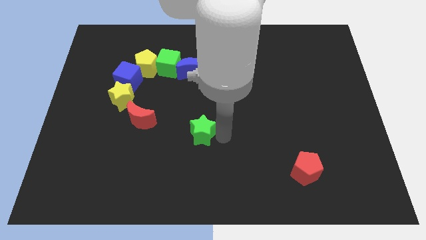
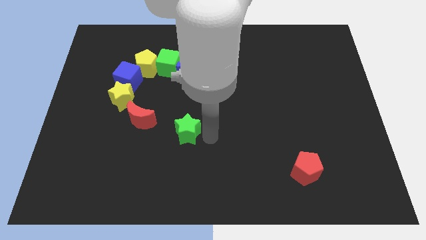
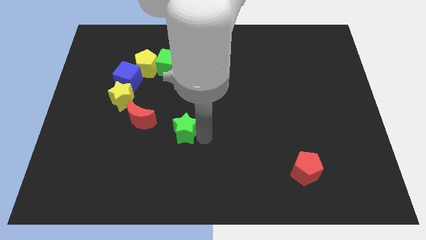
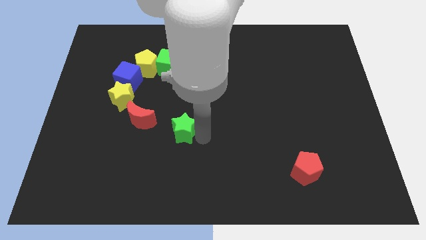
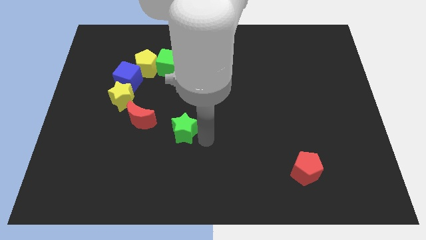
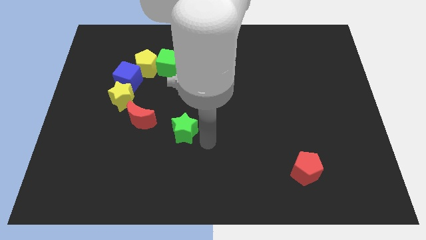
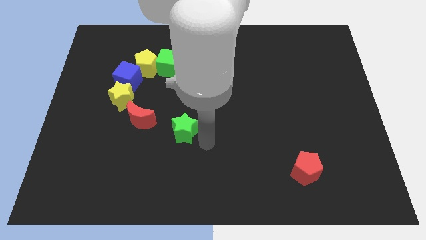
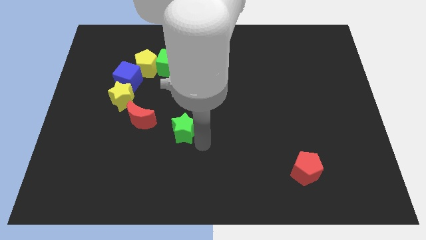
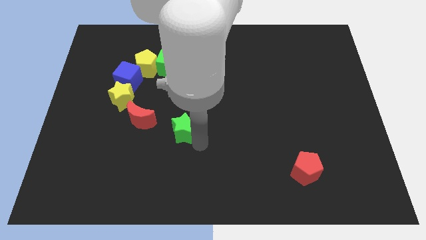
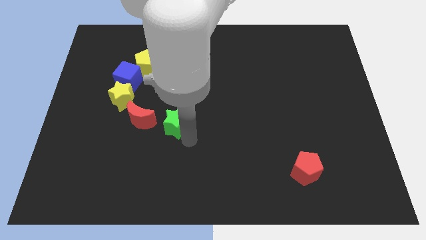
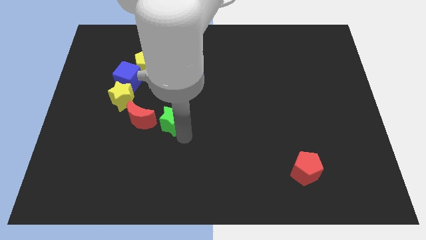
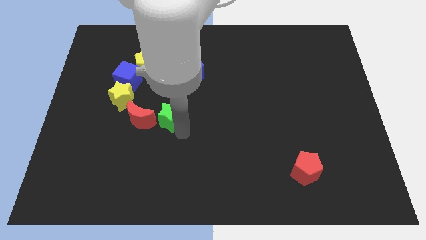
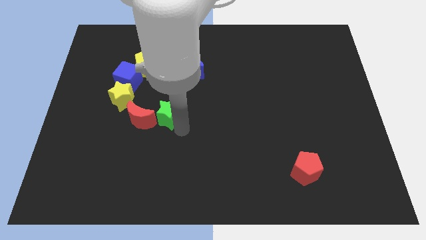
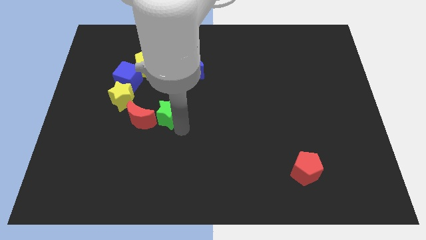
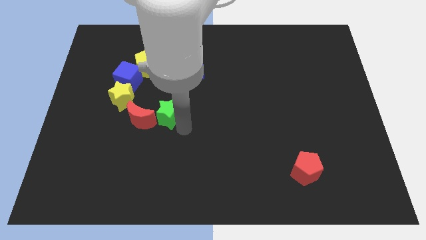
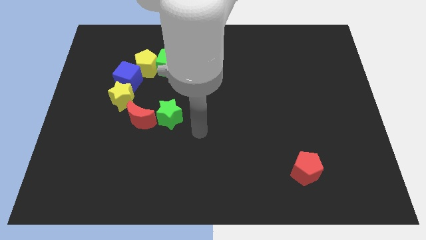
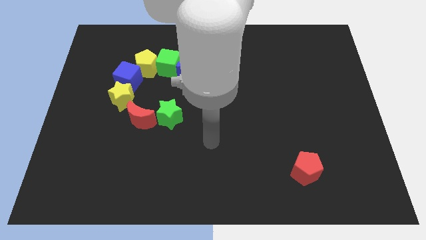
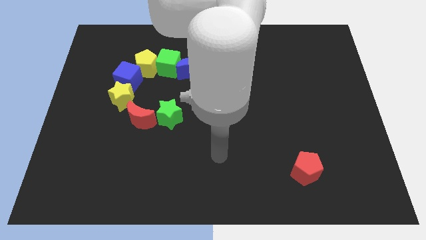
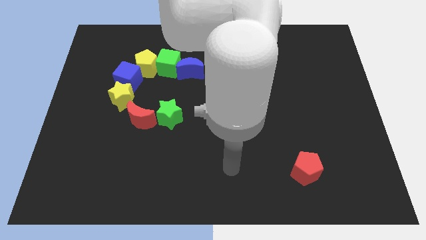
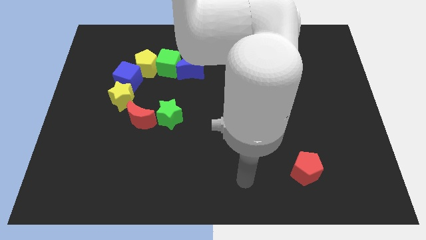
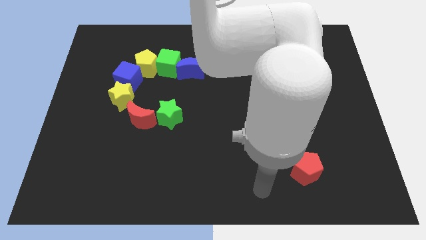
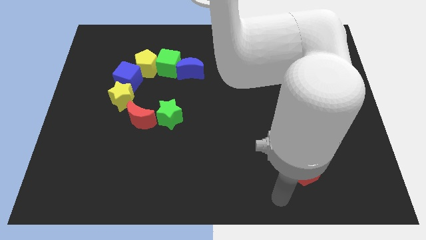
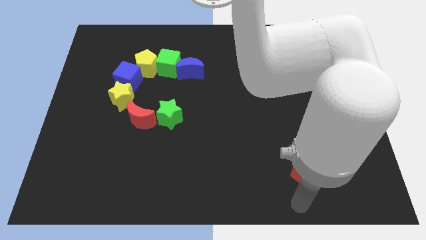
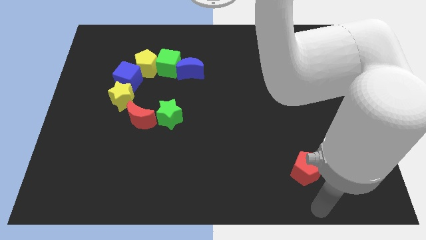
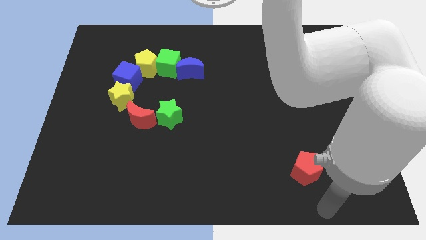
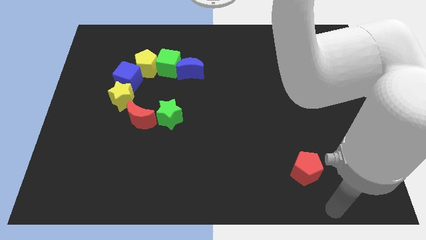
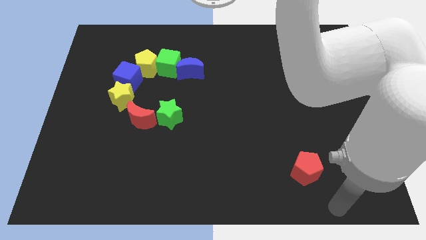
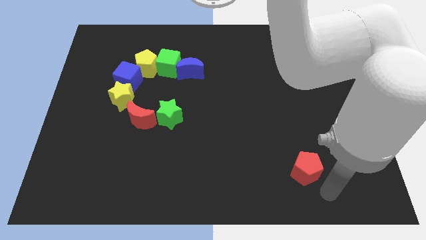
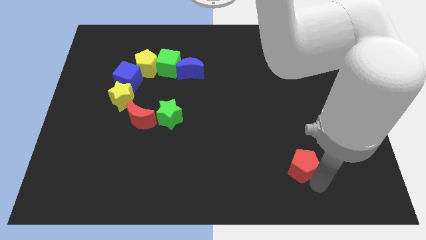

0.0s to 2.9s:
push the green star right to the red moon

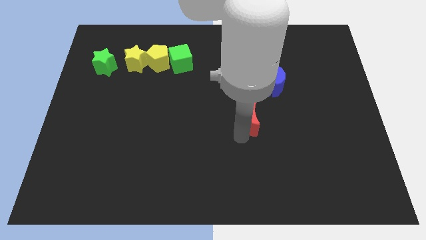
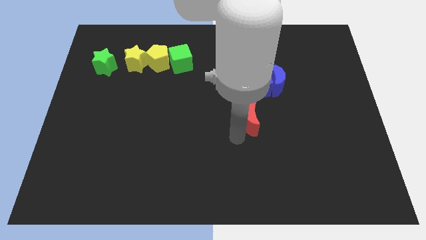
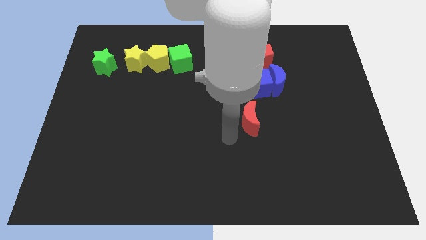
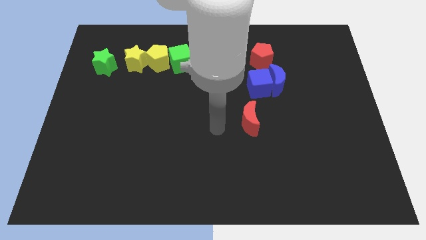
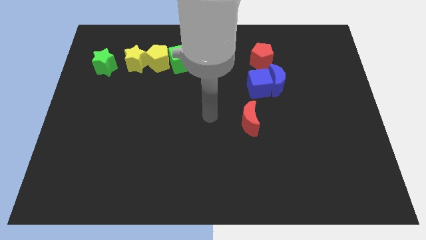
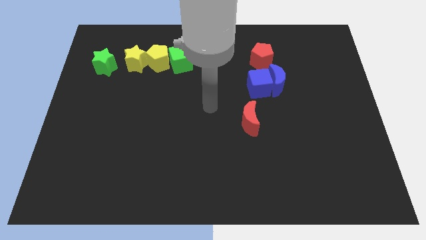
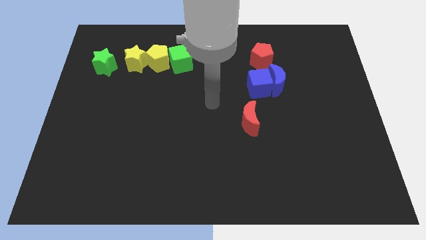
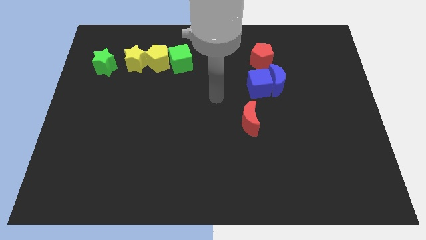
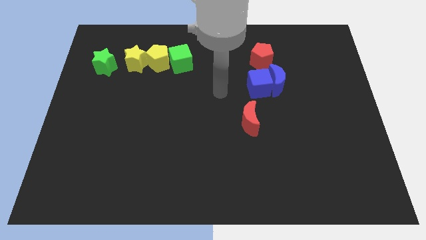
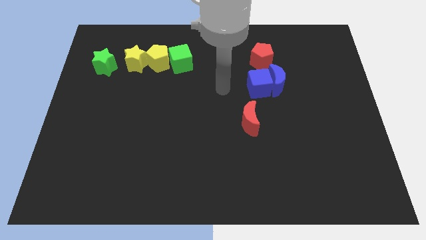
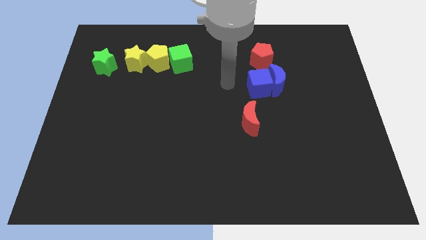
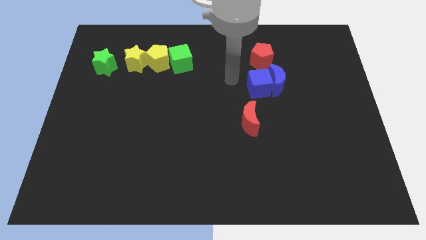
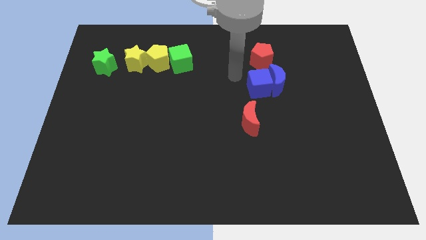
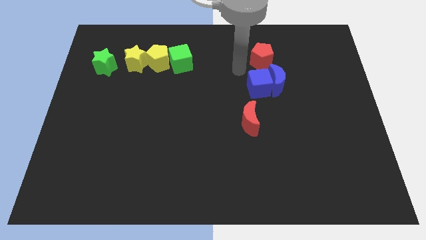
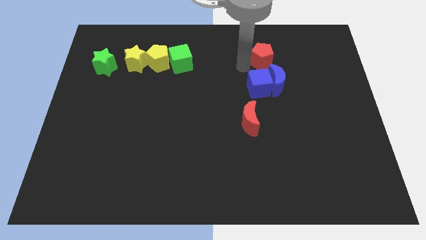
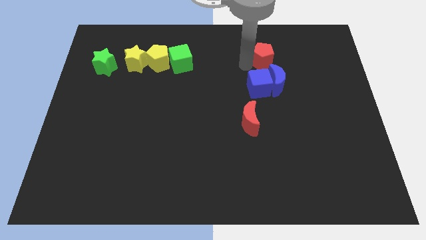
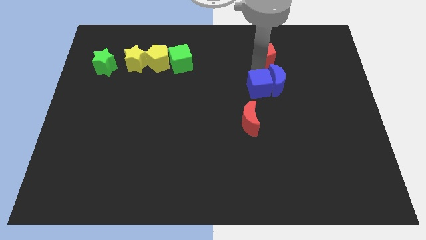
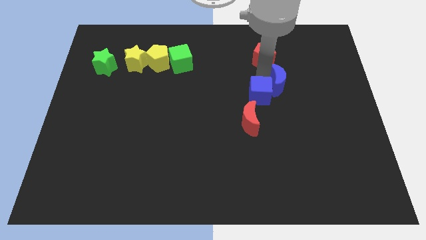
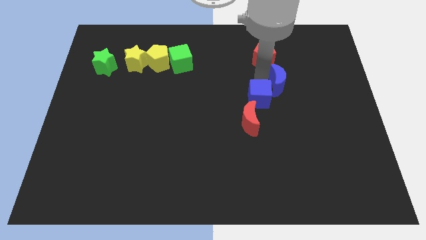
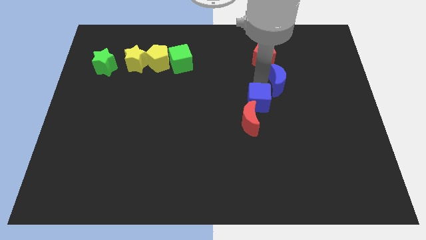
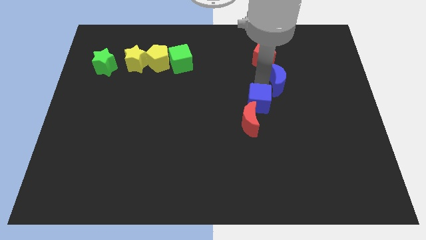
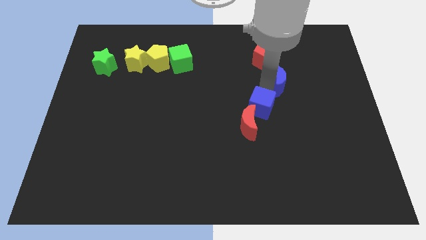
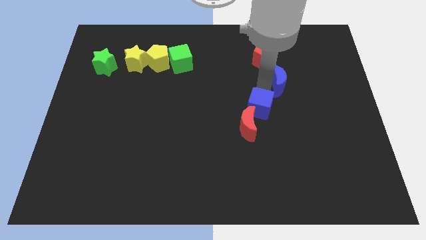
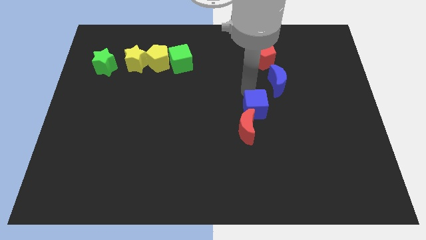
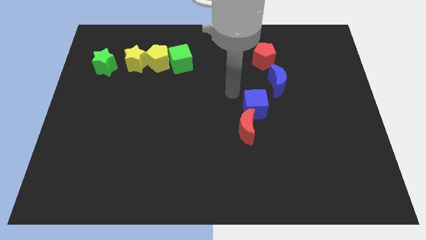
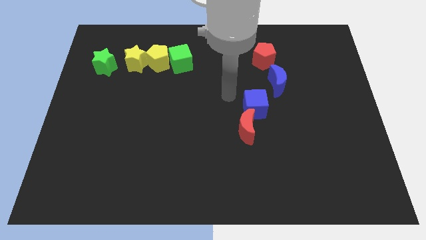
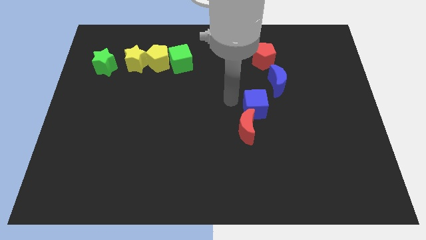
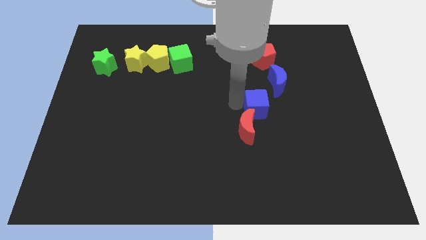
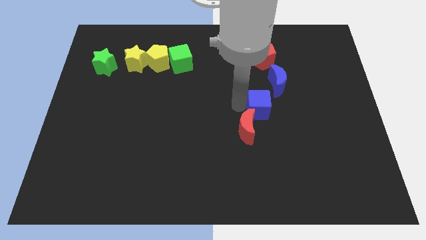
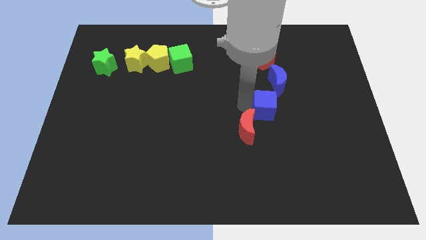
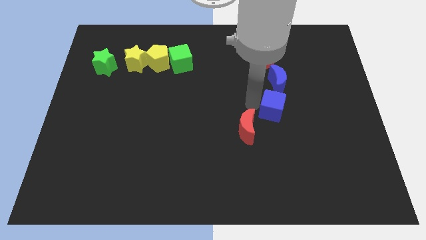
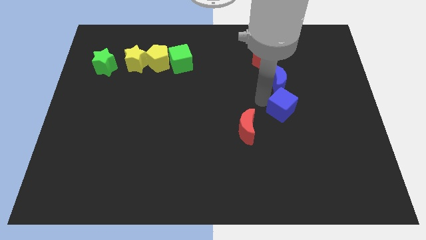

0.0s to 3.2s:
move the blue cube to the top right of the red crescent

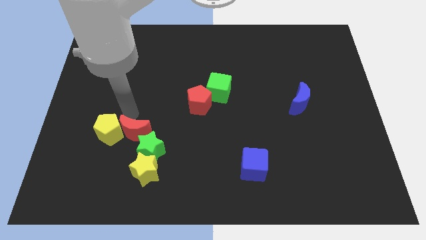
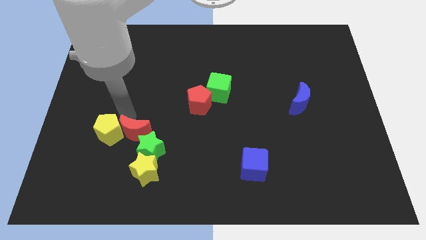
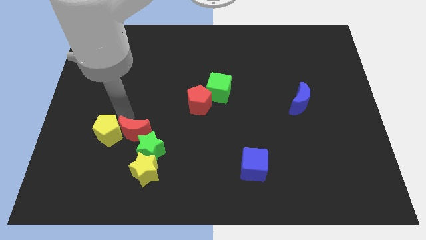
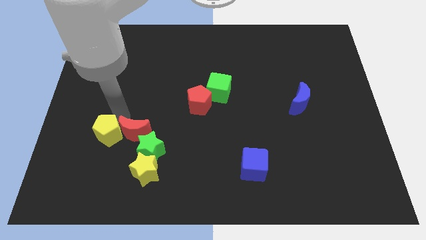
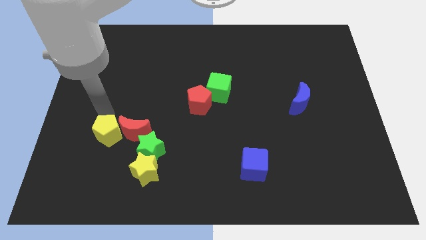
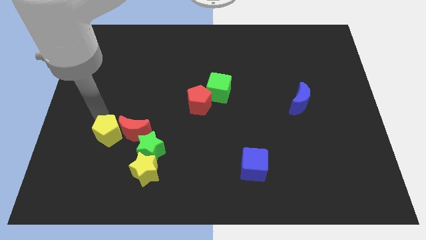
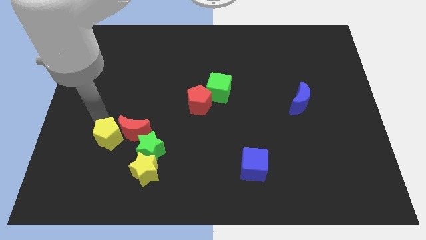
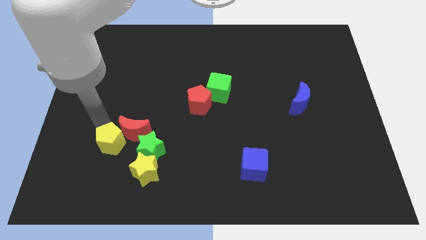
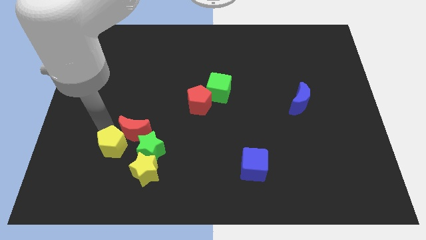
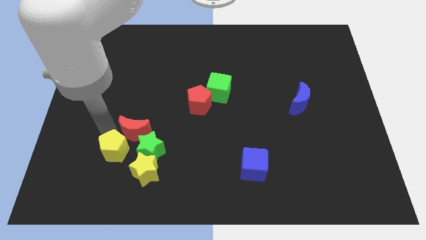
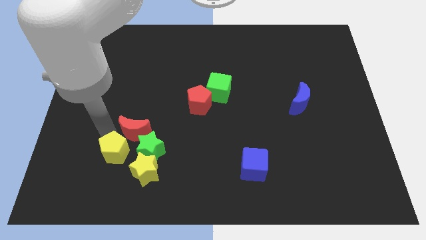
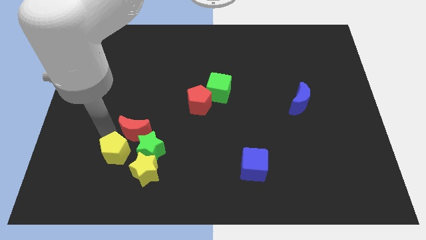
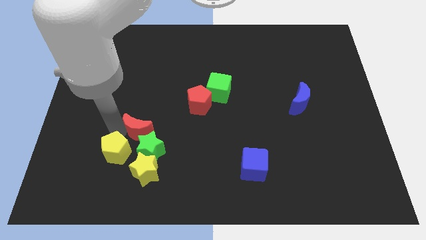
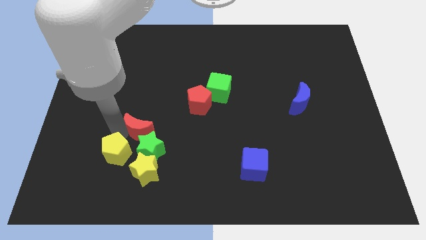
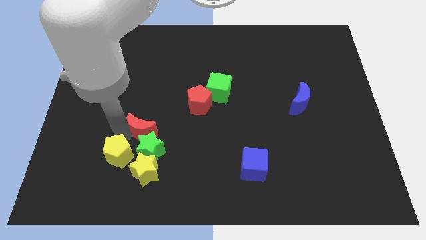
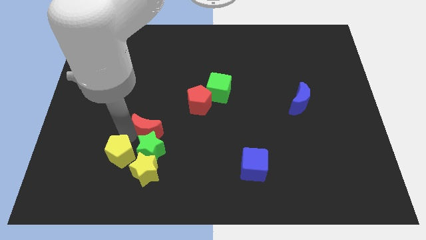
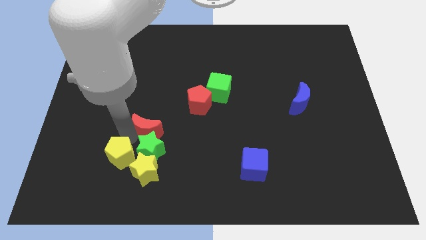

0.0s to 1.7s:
place yellow pentagon towards yellow star

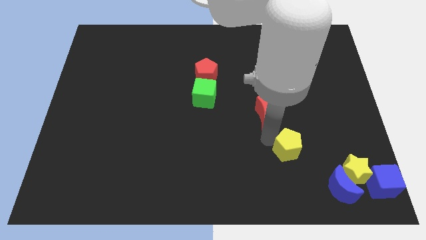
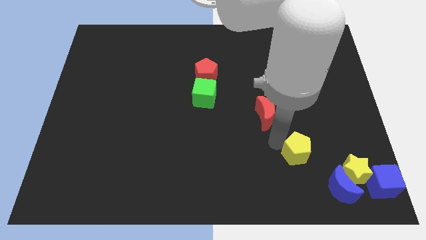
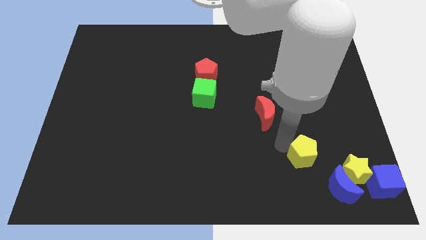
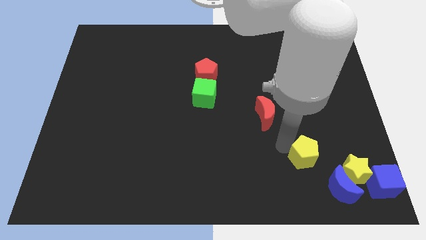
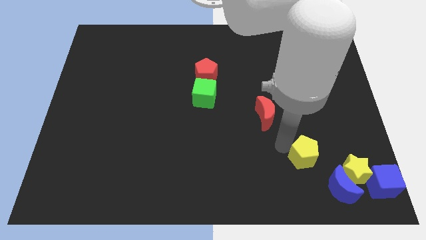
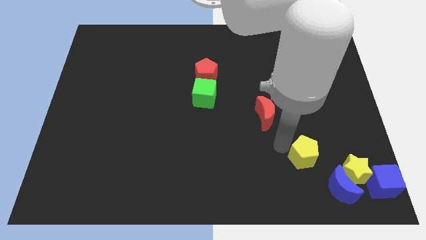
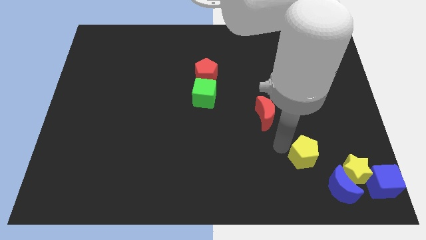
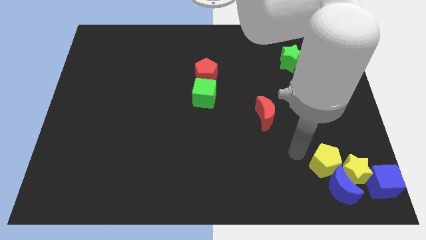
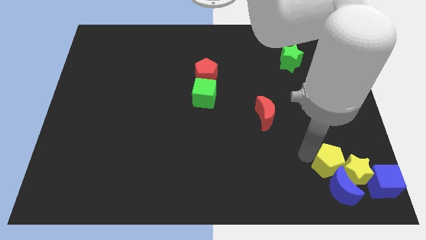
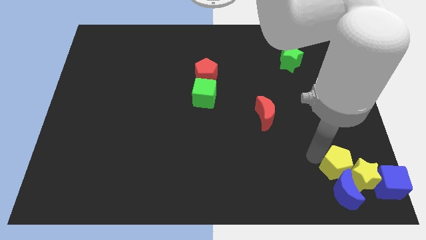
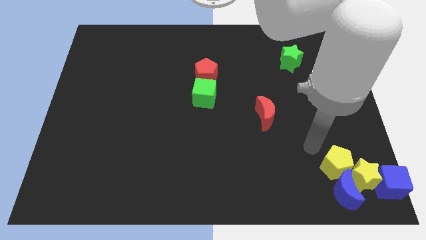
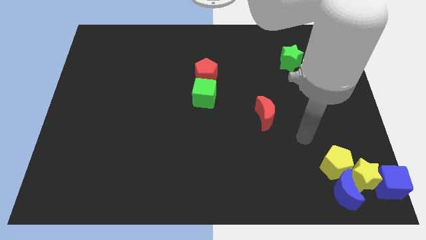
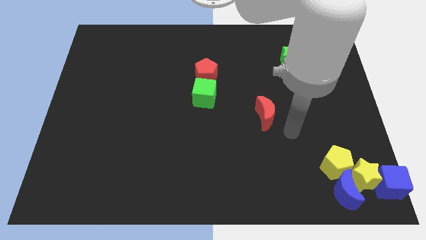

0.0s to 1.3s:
make a group out of yellow blocks and blue blocks

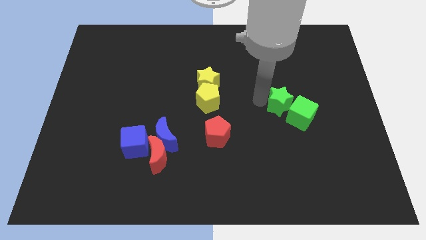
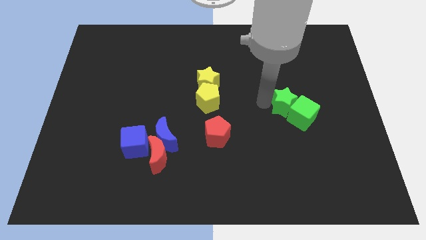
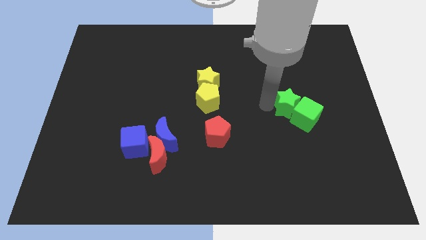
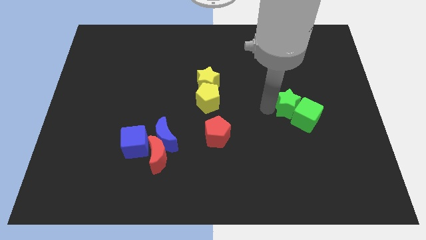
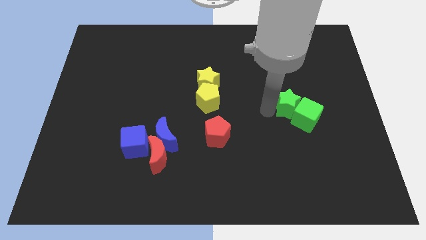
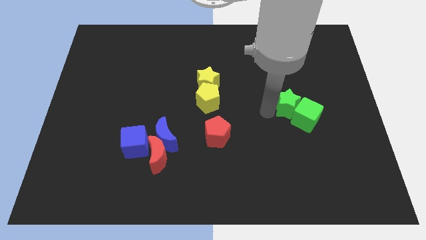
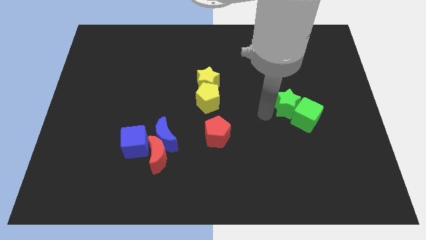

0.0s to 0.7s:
push the green star into the green cube
